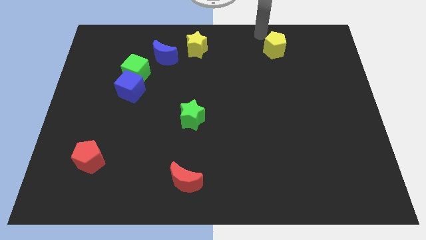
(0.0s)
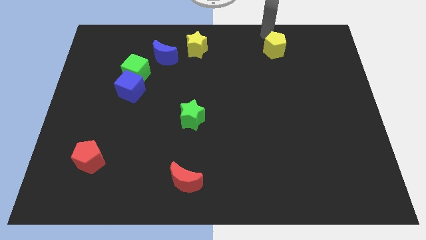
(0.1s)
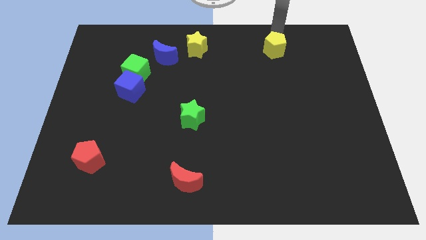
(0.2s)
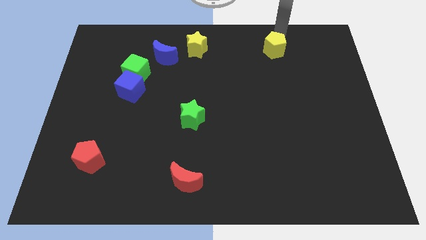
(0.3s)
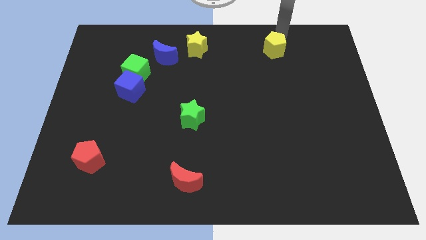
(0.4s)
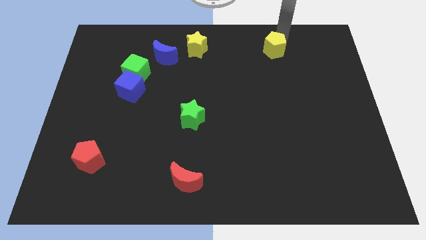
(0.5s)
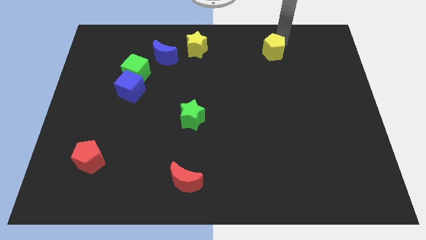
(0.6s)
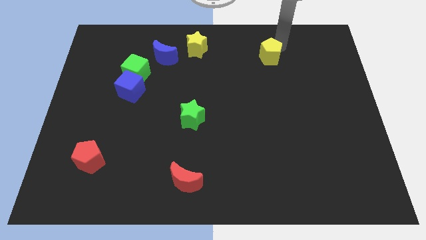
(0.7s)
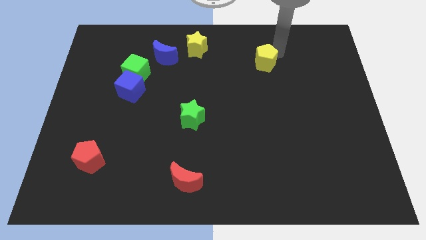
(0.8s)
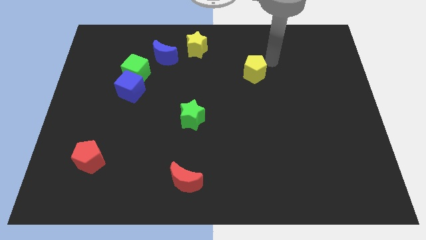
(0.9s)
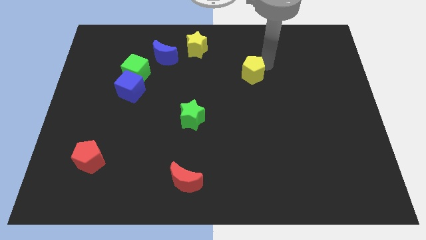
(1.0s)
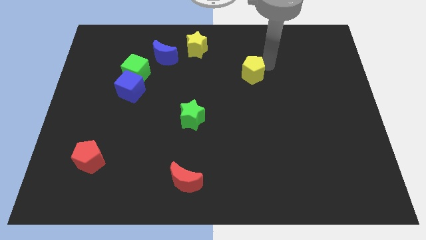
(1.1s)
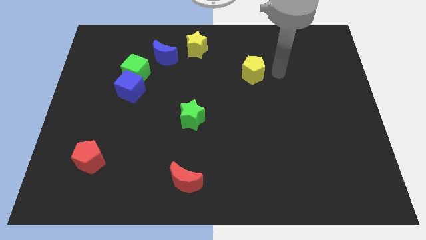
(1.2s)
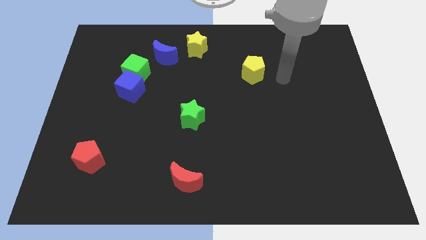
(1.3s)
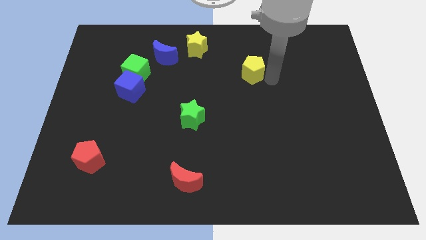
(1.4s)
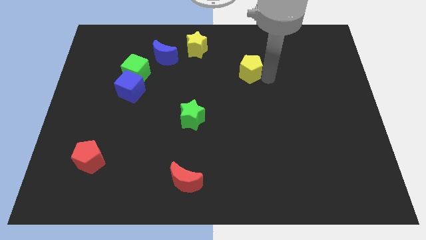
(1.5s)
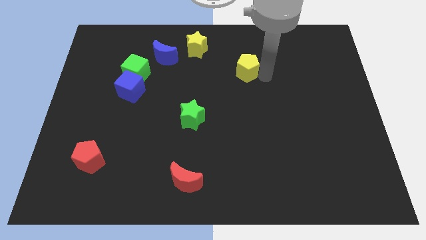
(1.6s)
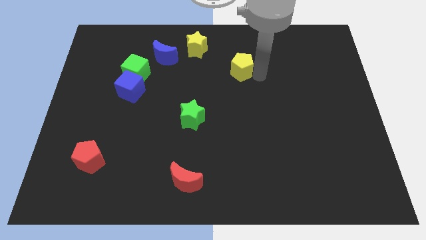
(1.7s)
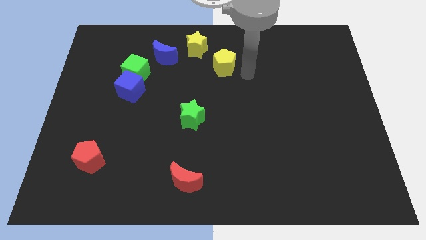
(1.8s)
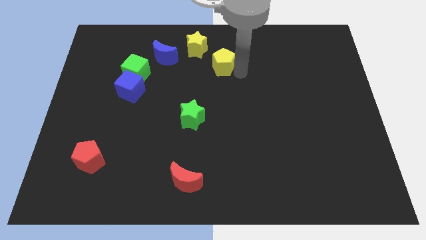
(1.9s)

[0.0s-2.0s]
place the yellow pentagon diagonally bottom right to the yellow star

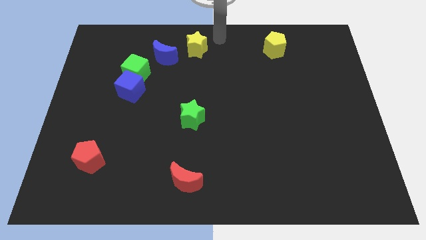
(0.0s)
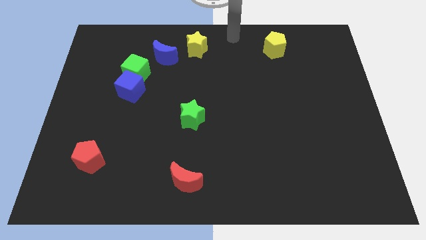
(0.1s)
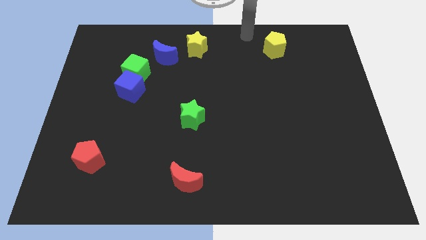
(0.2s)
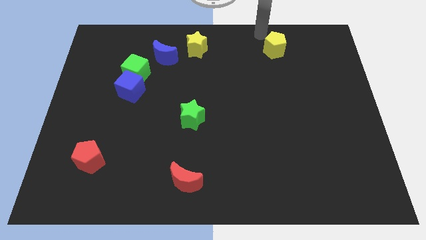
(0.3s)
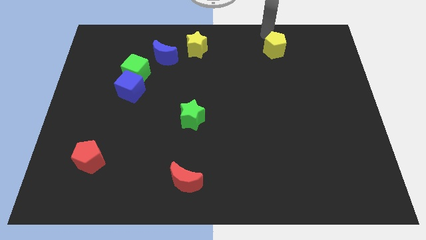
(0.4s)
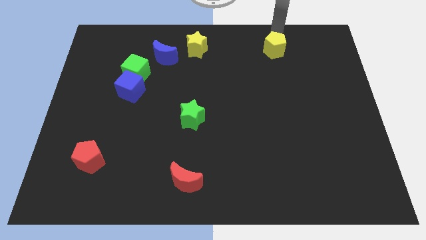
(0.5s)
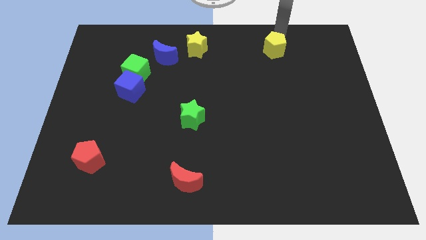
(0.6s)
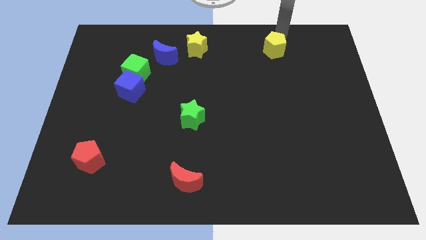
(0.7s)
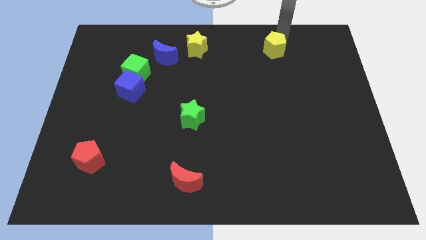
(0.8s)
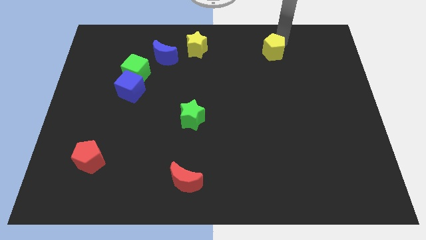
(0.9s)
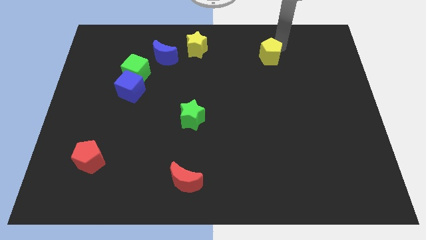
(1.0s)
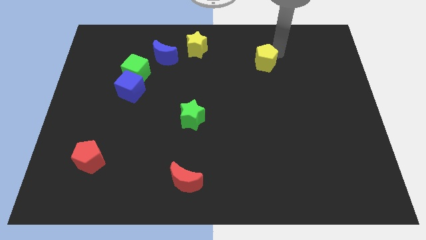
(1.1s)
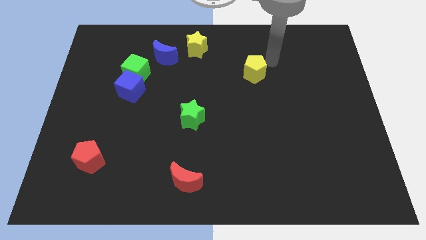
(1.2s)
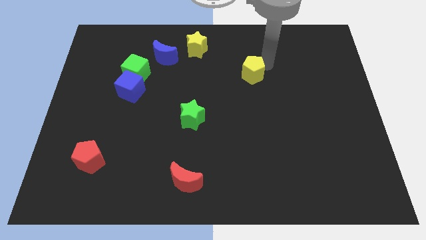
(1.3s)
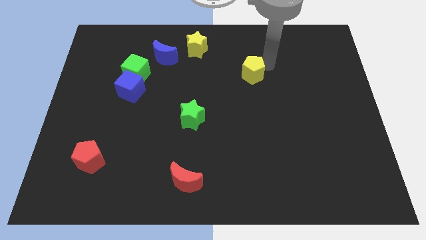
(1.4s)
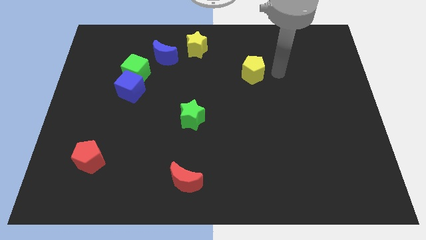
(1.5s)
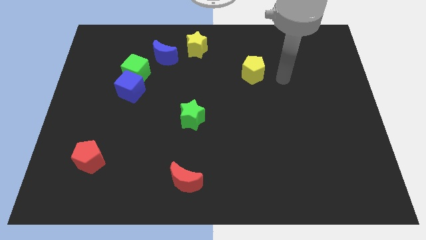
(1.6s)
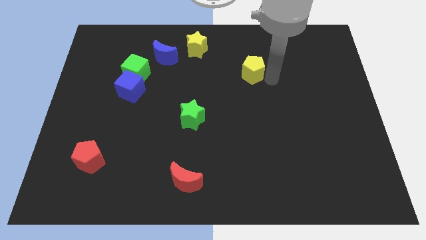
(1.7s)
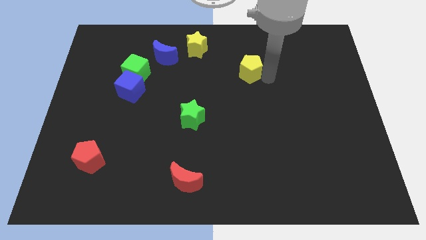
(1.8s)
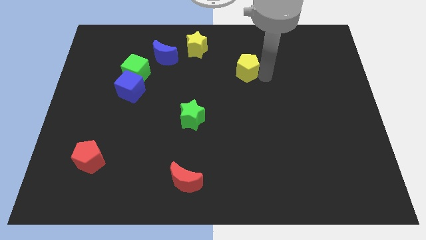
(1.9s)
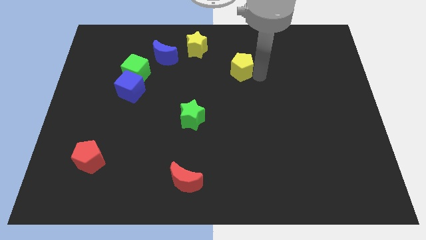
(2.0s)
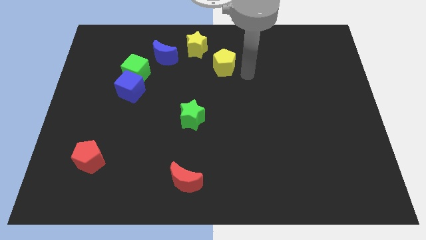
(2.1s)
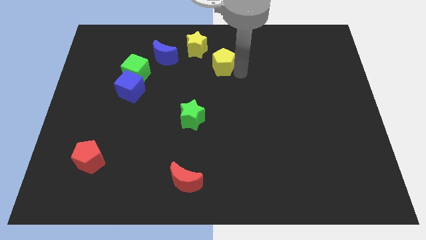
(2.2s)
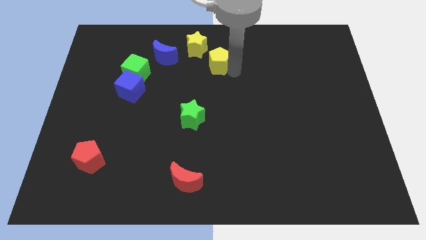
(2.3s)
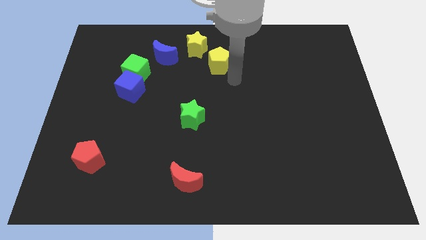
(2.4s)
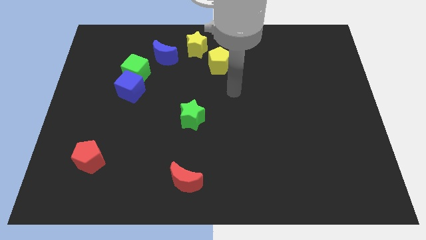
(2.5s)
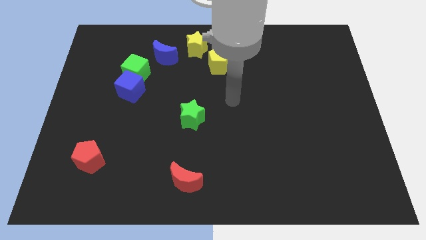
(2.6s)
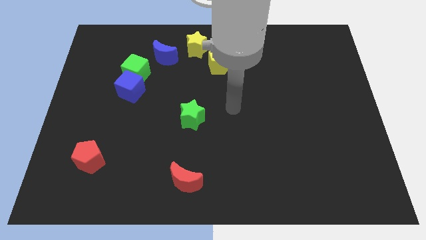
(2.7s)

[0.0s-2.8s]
push the yellow pentagon to the bottom right side of the yellow star

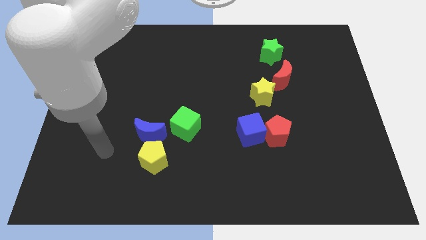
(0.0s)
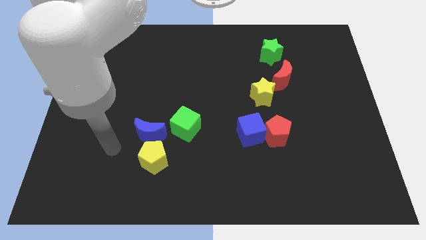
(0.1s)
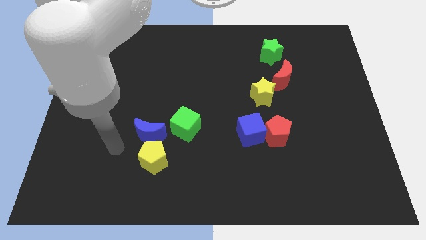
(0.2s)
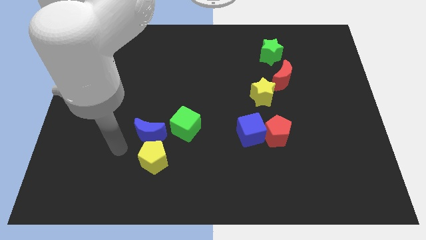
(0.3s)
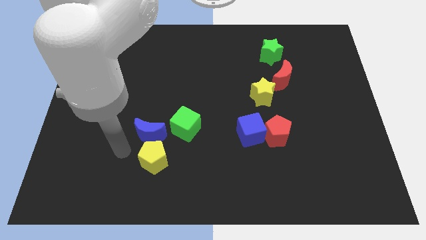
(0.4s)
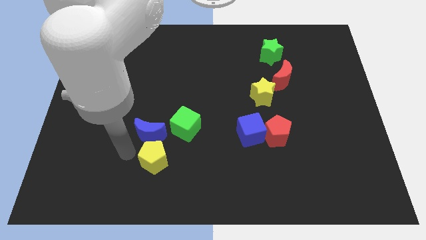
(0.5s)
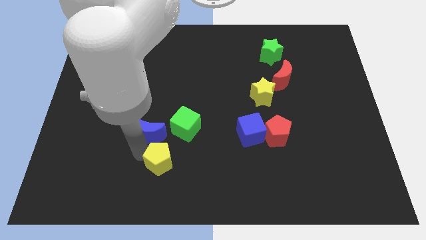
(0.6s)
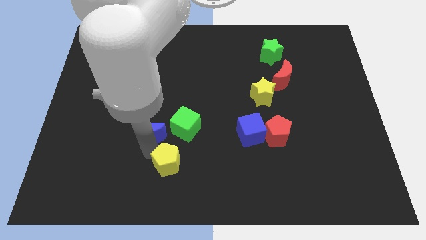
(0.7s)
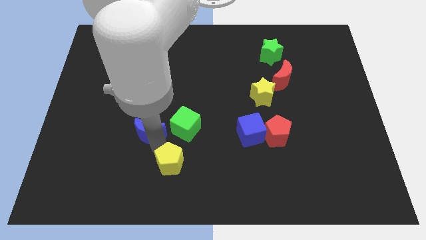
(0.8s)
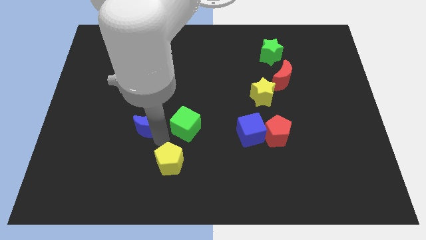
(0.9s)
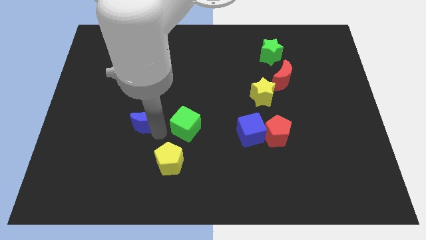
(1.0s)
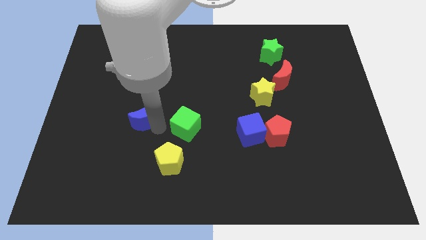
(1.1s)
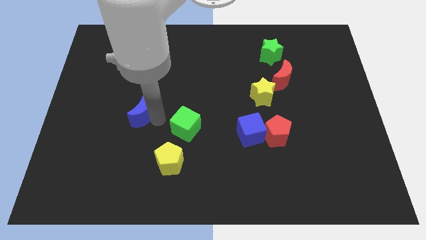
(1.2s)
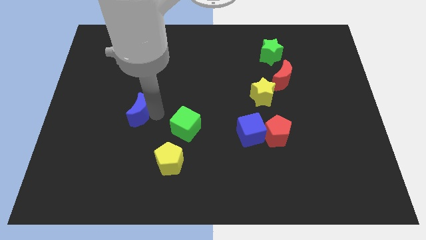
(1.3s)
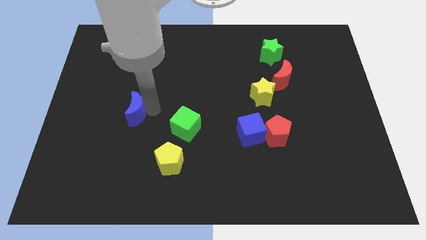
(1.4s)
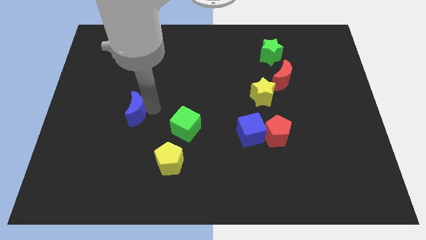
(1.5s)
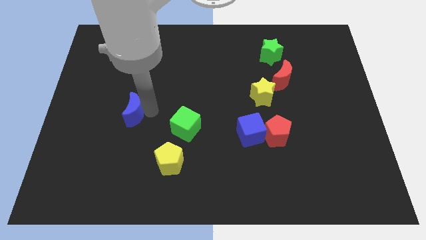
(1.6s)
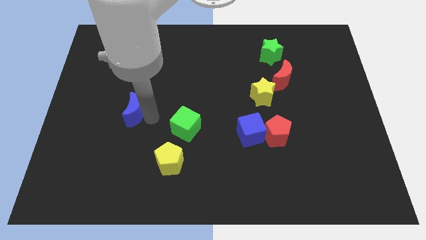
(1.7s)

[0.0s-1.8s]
separate blue moon and yellow pentagon

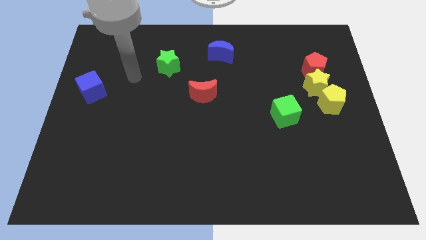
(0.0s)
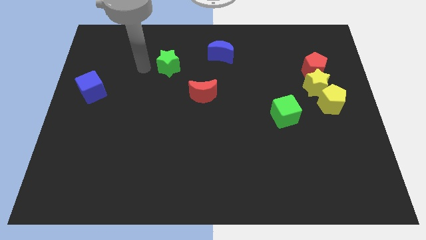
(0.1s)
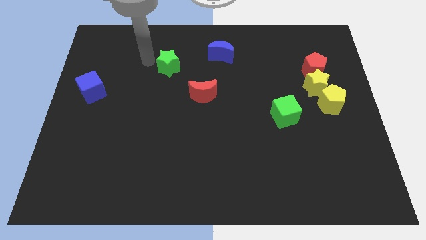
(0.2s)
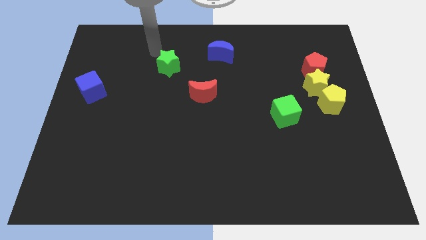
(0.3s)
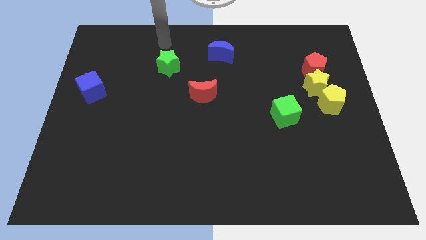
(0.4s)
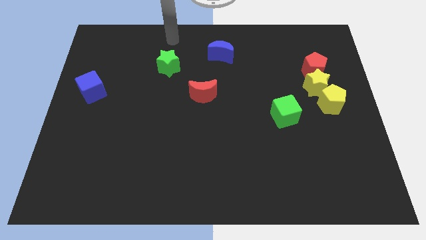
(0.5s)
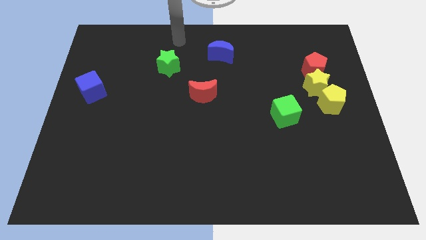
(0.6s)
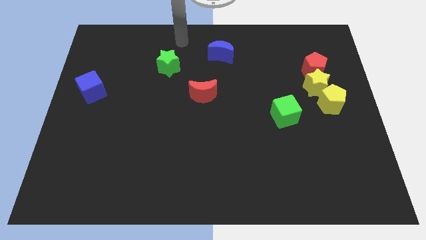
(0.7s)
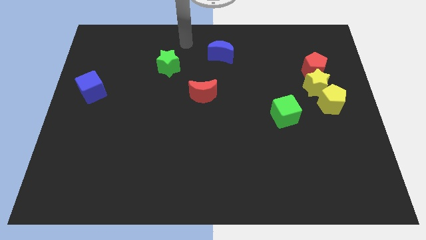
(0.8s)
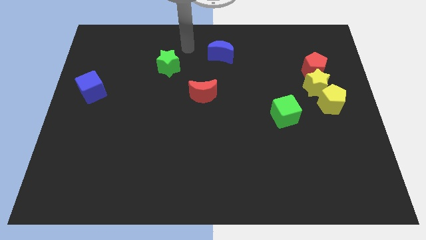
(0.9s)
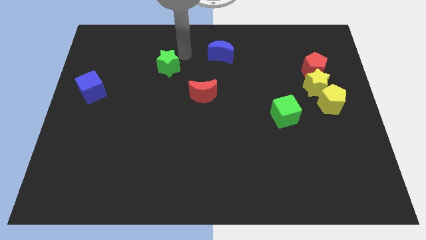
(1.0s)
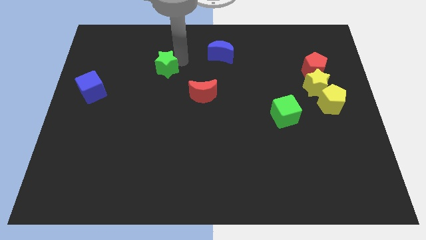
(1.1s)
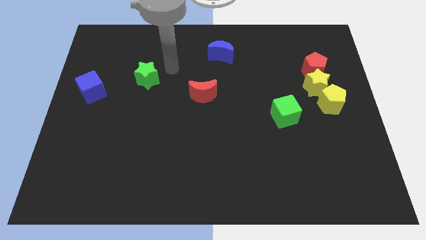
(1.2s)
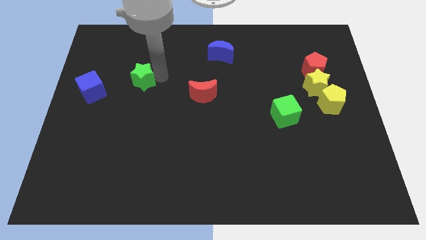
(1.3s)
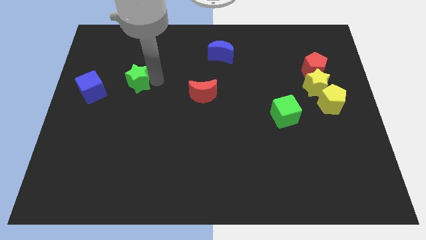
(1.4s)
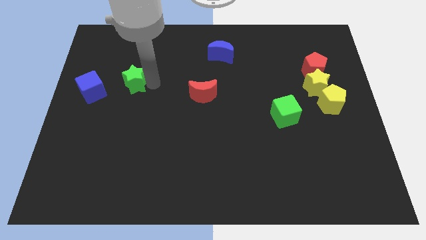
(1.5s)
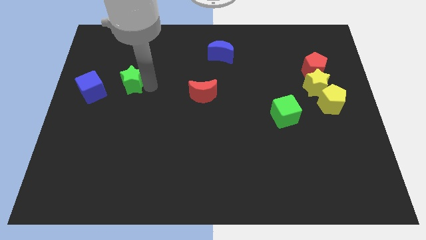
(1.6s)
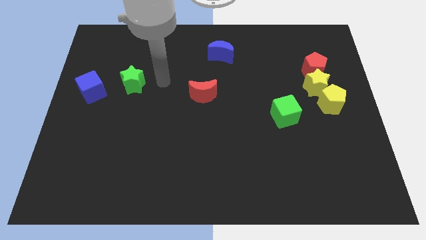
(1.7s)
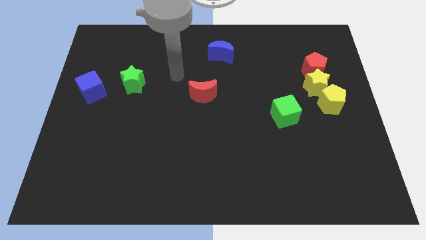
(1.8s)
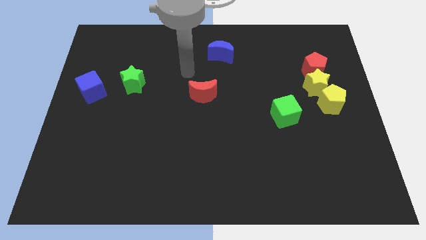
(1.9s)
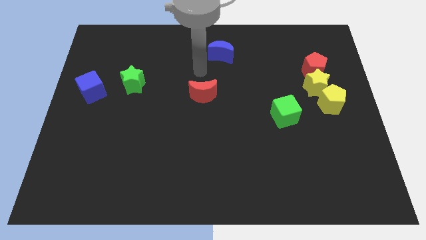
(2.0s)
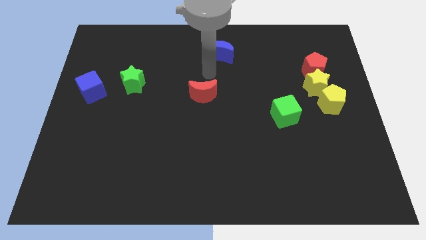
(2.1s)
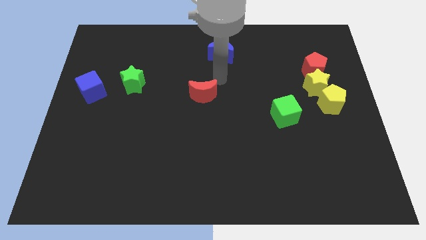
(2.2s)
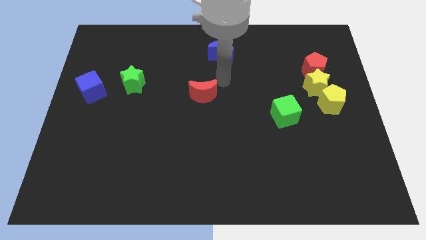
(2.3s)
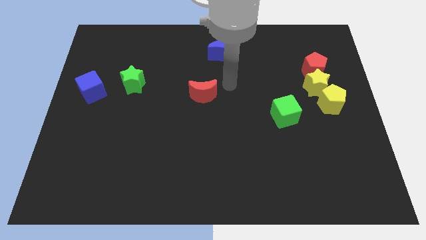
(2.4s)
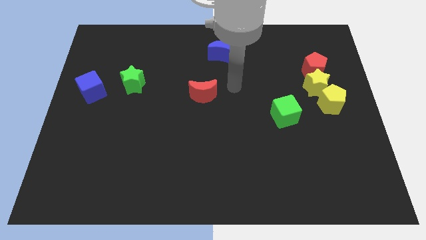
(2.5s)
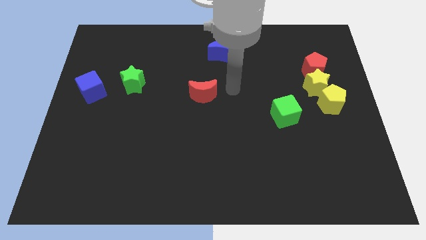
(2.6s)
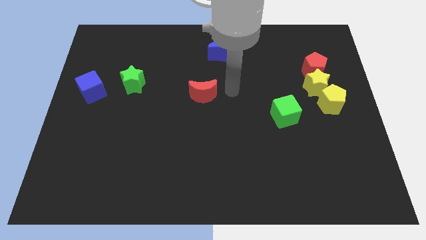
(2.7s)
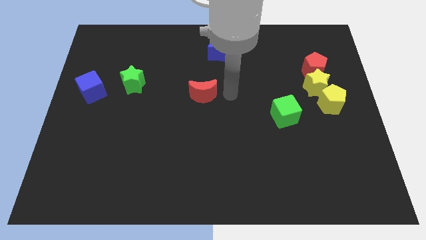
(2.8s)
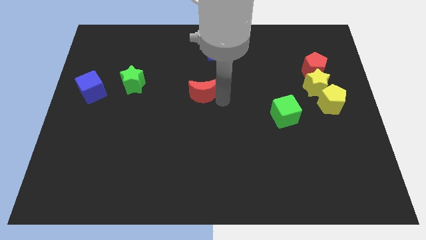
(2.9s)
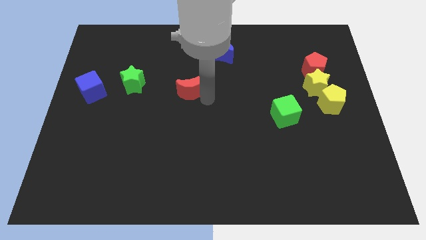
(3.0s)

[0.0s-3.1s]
place the green star right to the blue cube
